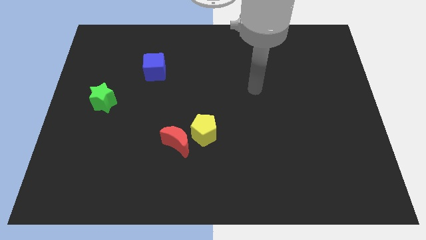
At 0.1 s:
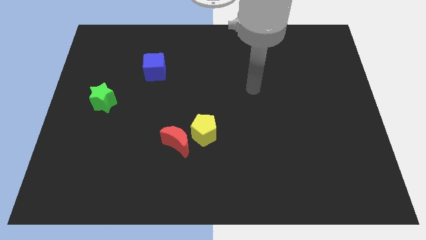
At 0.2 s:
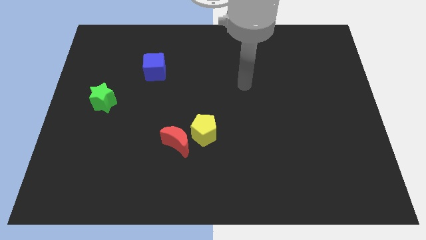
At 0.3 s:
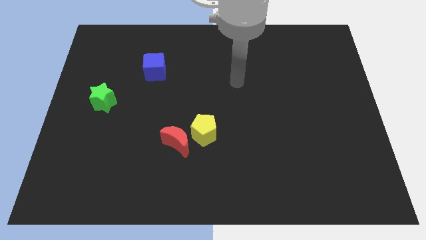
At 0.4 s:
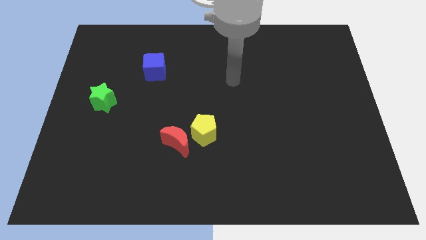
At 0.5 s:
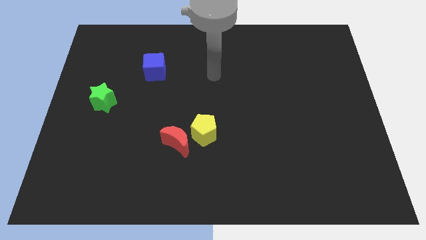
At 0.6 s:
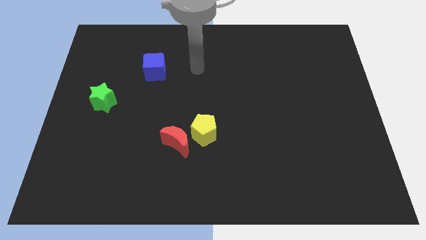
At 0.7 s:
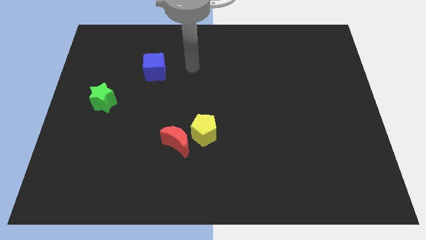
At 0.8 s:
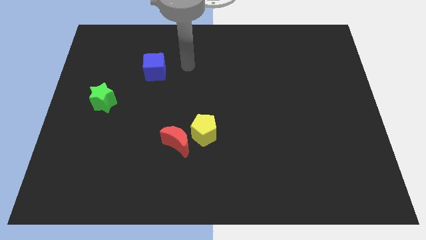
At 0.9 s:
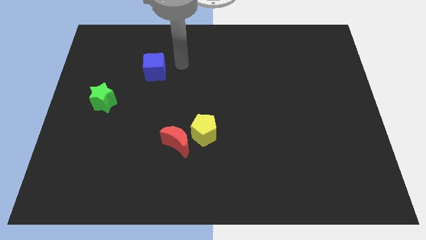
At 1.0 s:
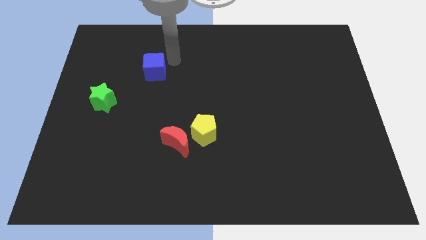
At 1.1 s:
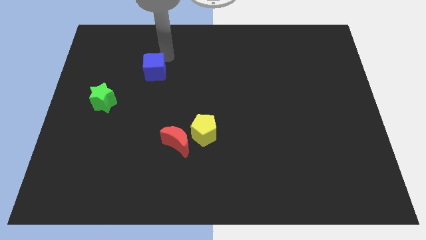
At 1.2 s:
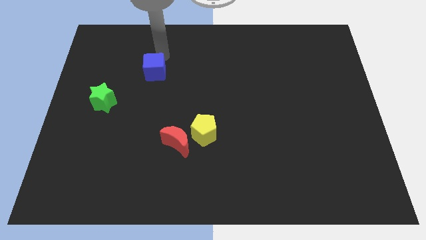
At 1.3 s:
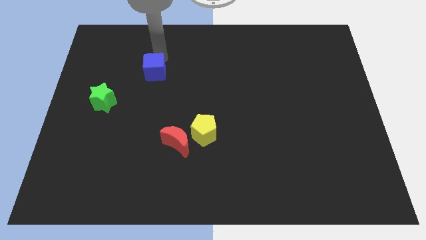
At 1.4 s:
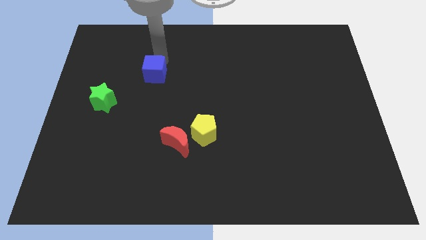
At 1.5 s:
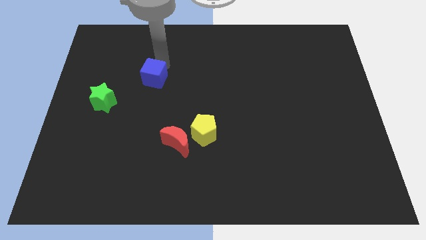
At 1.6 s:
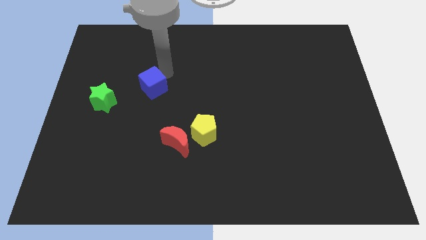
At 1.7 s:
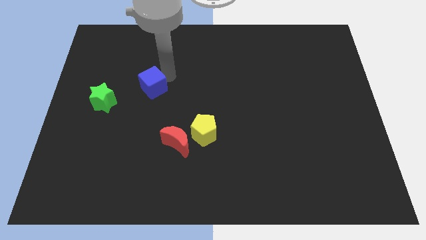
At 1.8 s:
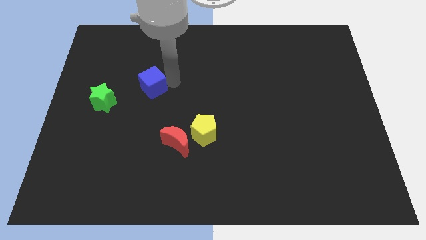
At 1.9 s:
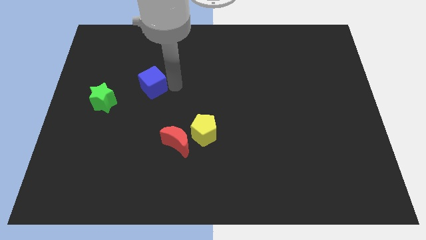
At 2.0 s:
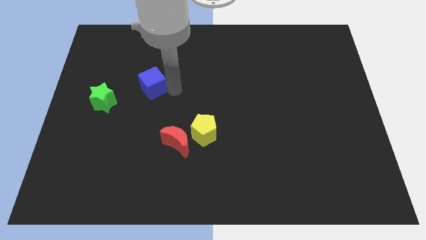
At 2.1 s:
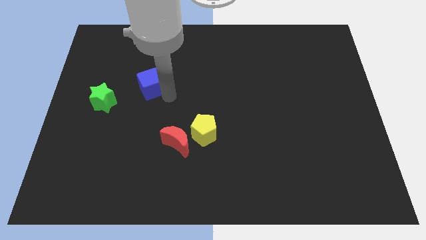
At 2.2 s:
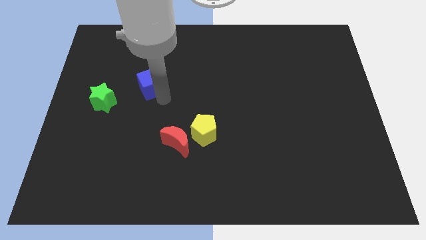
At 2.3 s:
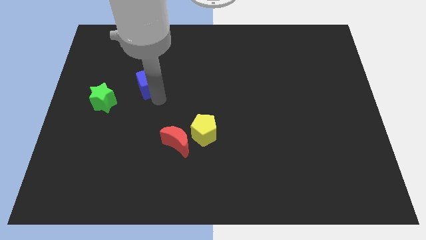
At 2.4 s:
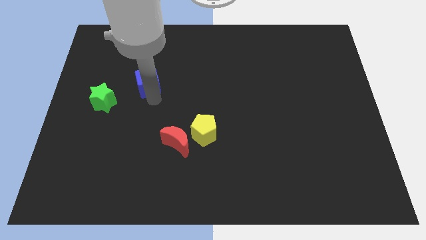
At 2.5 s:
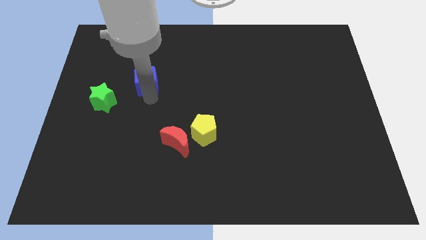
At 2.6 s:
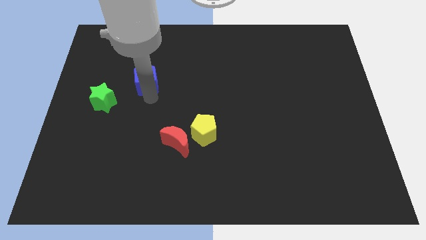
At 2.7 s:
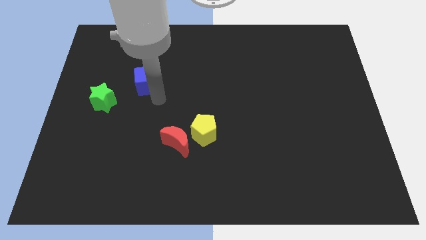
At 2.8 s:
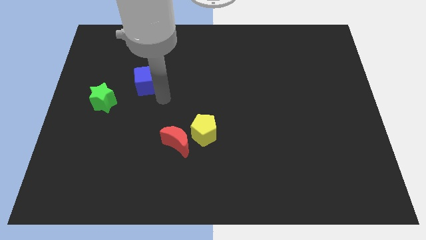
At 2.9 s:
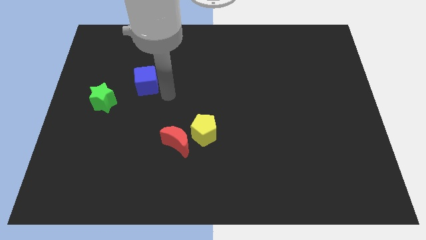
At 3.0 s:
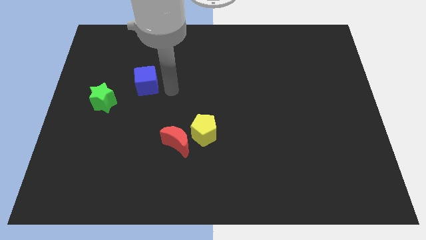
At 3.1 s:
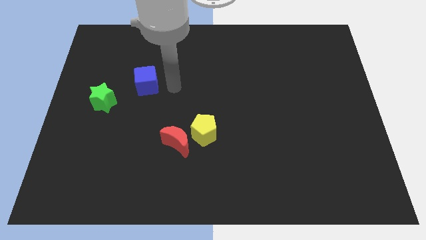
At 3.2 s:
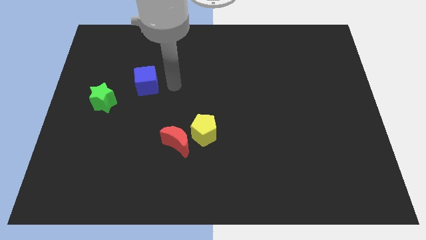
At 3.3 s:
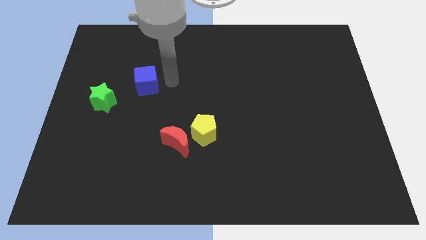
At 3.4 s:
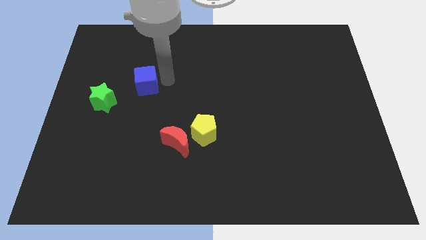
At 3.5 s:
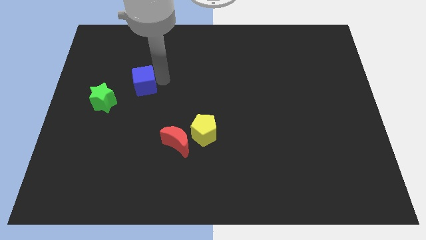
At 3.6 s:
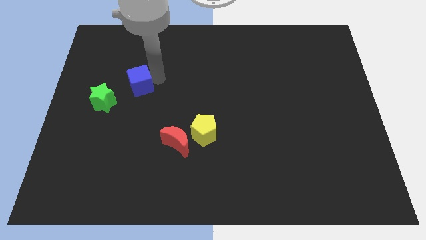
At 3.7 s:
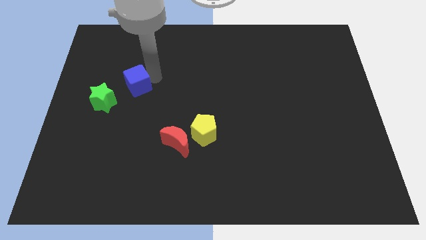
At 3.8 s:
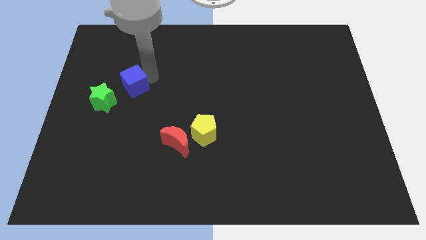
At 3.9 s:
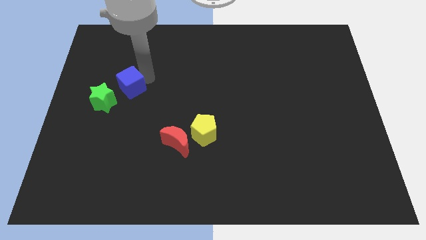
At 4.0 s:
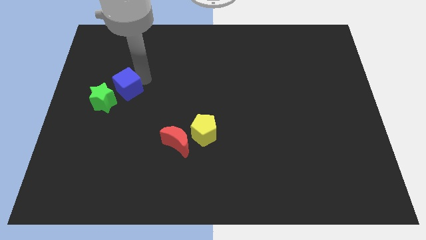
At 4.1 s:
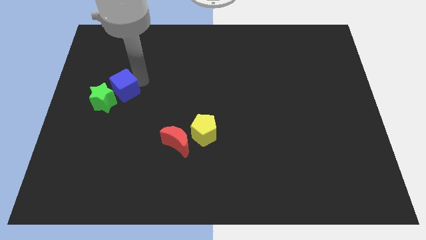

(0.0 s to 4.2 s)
move the blue block close to the green block

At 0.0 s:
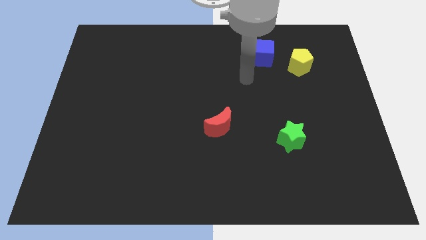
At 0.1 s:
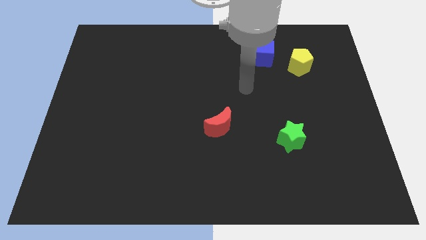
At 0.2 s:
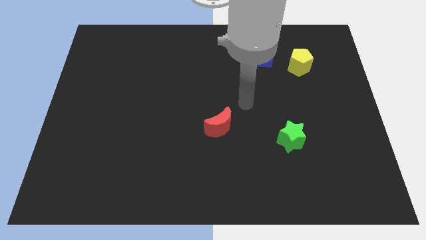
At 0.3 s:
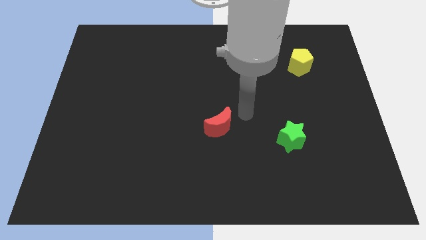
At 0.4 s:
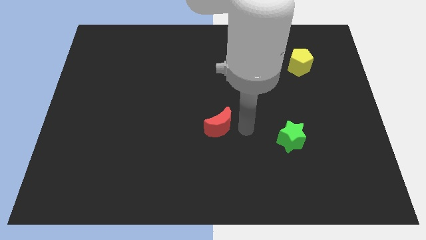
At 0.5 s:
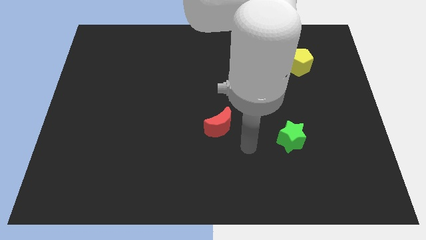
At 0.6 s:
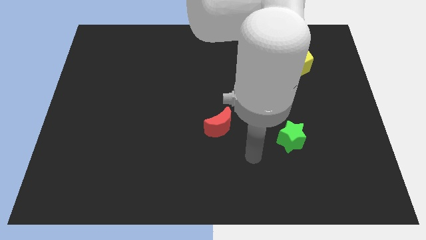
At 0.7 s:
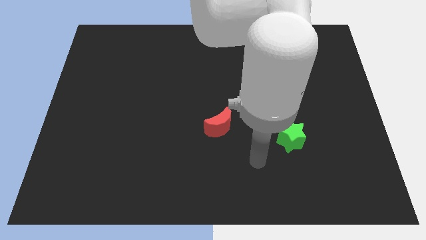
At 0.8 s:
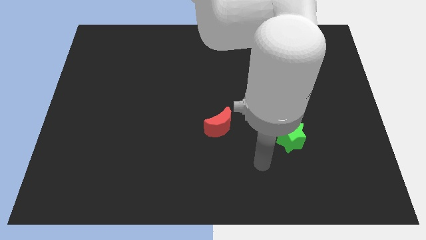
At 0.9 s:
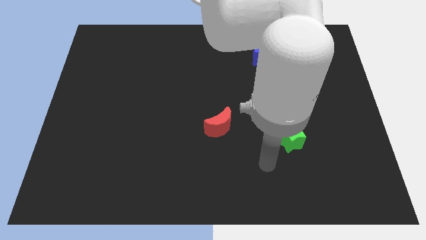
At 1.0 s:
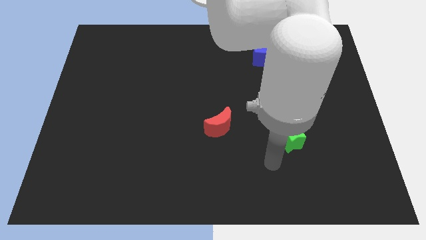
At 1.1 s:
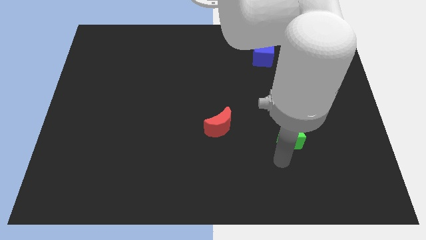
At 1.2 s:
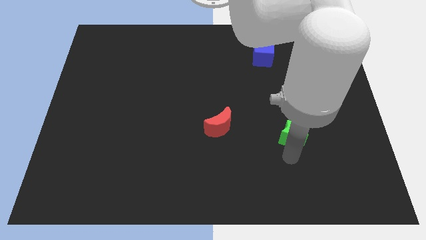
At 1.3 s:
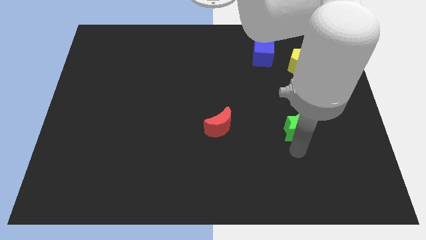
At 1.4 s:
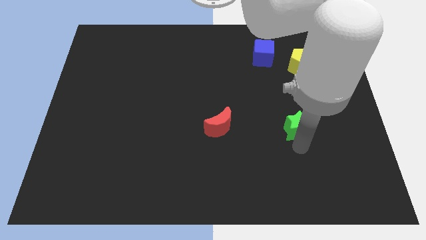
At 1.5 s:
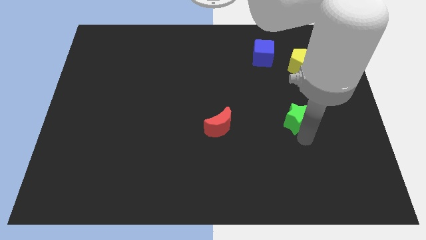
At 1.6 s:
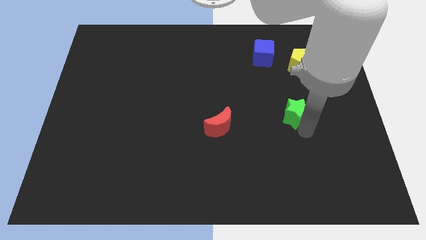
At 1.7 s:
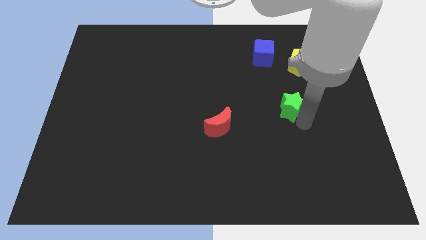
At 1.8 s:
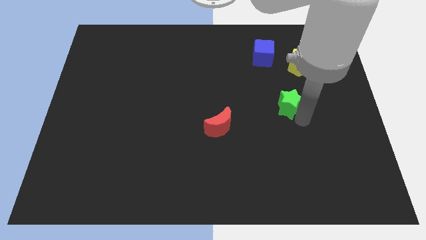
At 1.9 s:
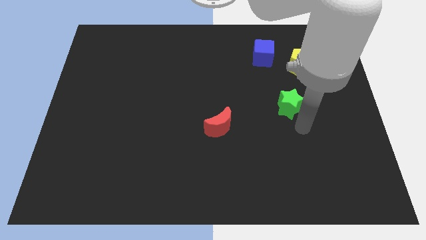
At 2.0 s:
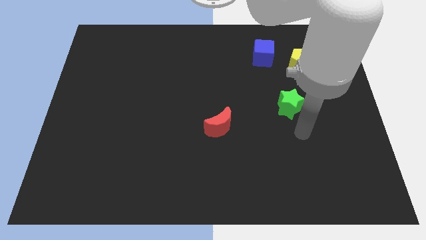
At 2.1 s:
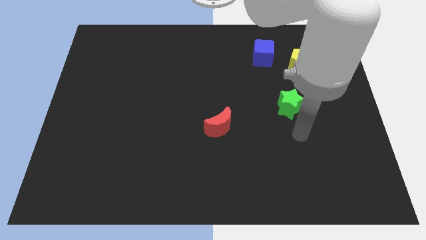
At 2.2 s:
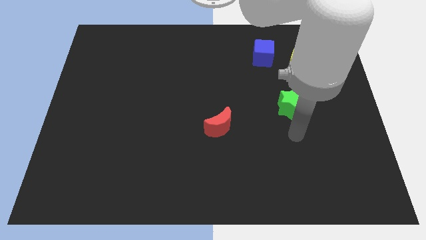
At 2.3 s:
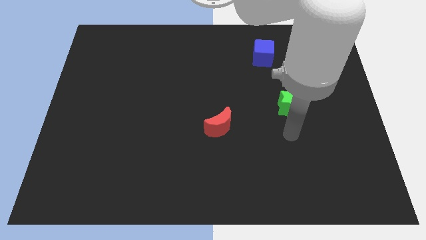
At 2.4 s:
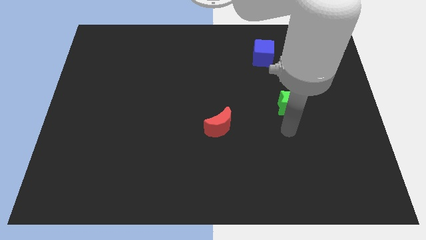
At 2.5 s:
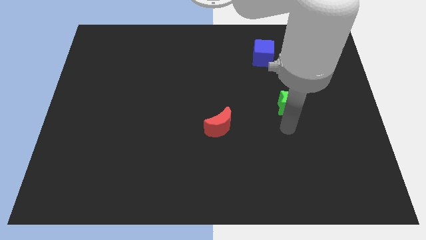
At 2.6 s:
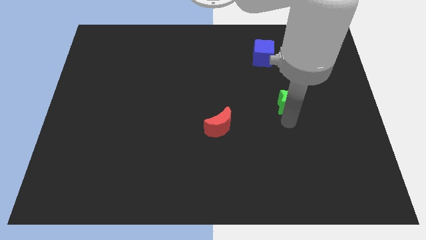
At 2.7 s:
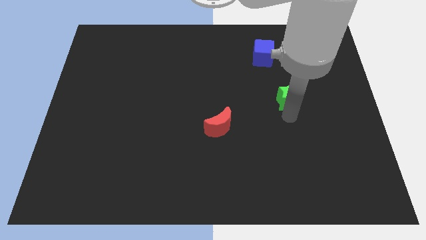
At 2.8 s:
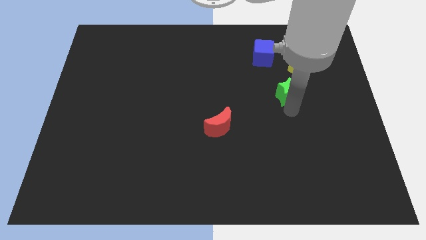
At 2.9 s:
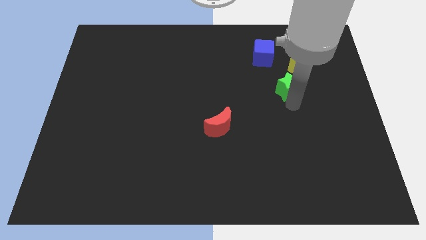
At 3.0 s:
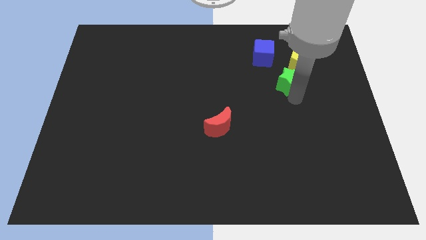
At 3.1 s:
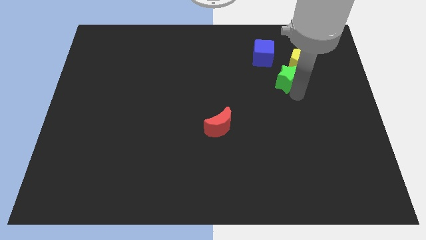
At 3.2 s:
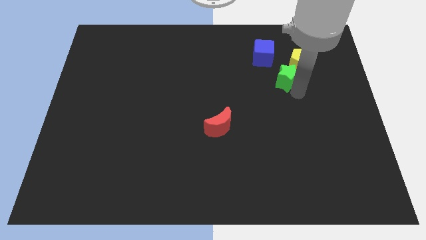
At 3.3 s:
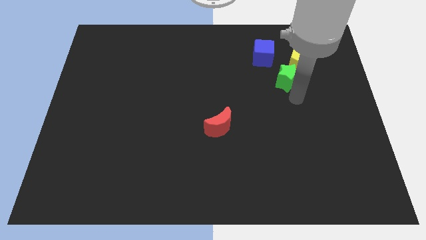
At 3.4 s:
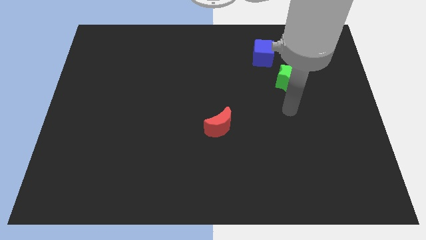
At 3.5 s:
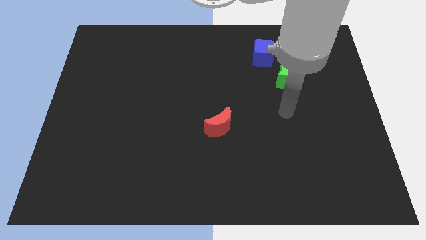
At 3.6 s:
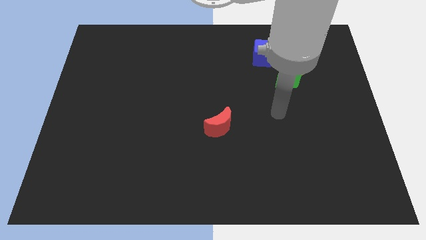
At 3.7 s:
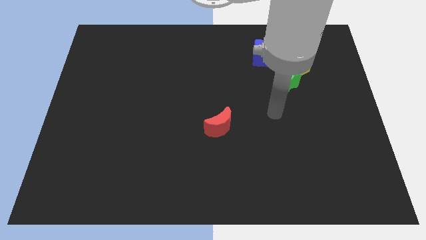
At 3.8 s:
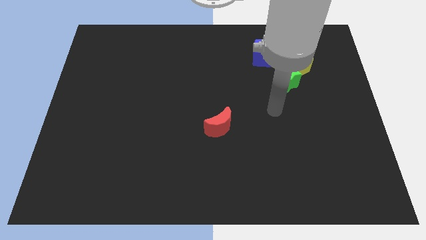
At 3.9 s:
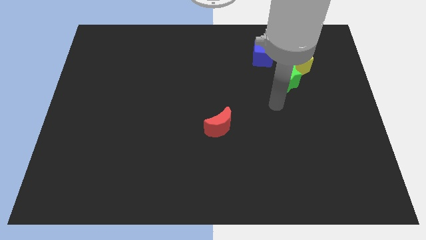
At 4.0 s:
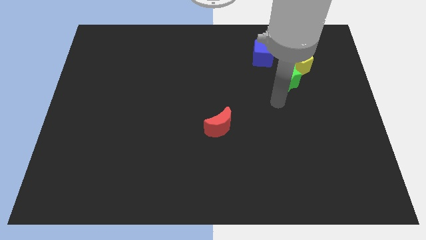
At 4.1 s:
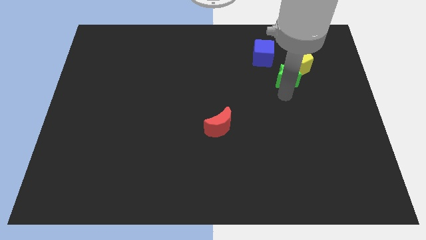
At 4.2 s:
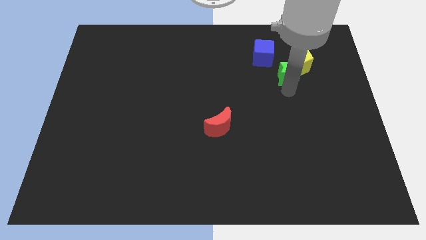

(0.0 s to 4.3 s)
move the green block towards the yellow pentagon
